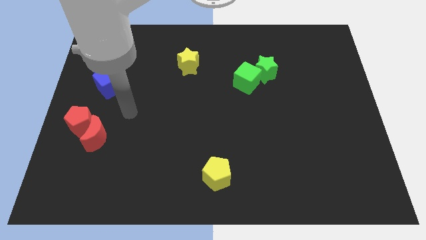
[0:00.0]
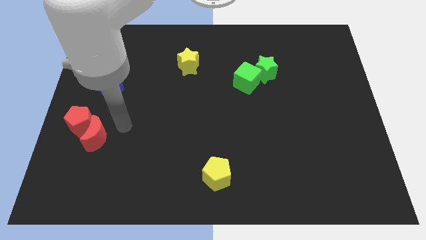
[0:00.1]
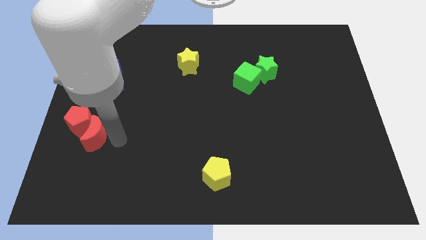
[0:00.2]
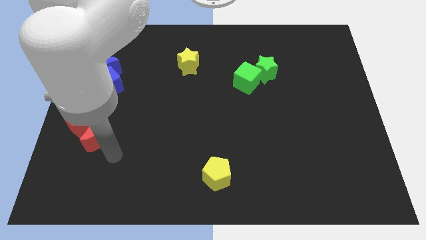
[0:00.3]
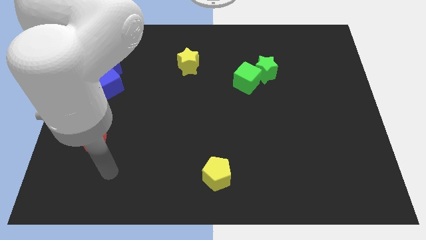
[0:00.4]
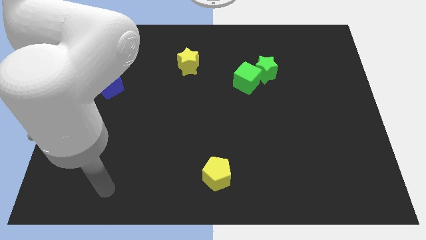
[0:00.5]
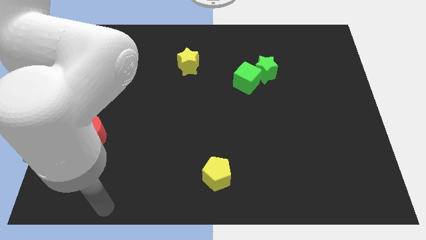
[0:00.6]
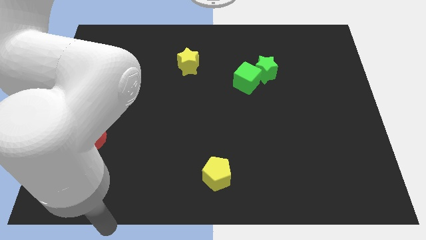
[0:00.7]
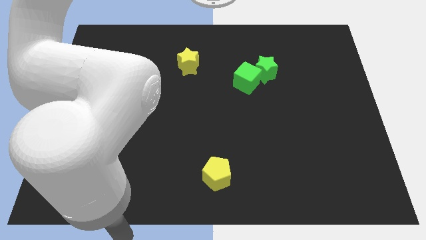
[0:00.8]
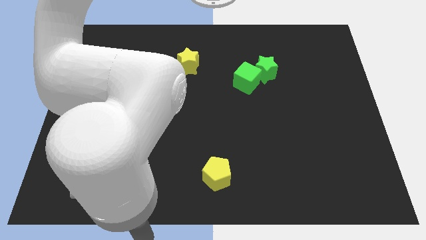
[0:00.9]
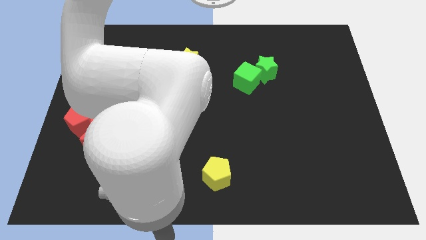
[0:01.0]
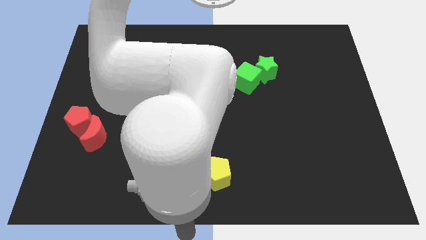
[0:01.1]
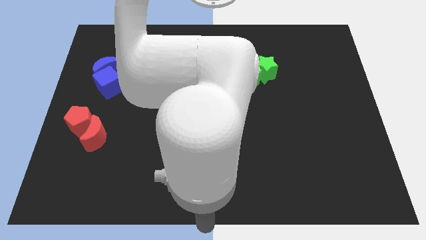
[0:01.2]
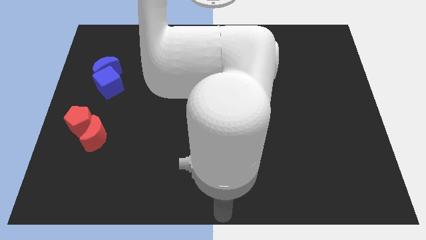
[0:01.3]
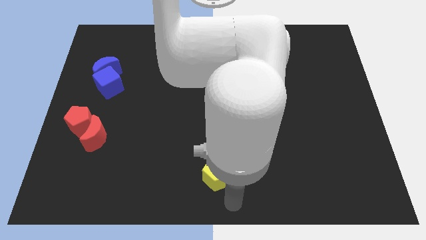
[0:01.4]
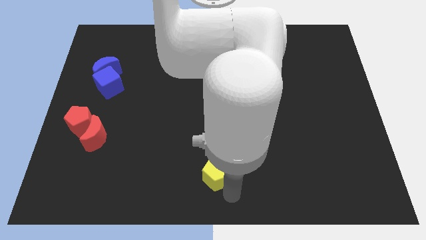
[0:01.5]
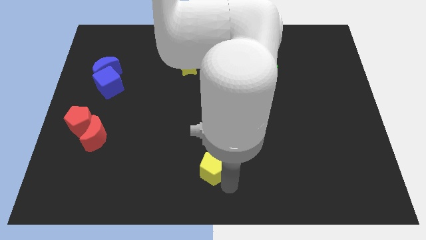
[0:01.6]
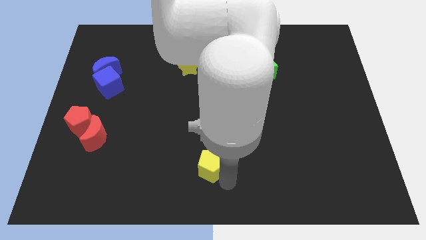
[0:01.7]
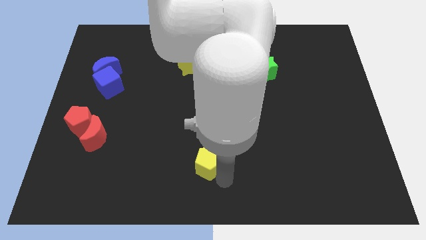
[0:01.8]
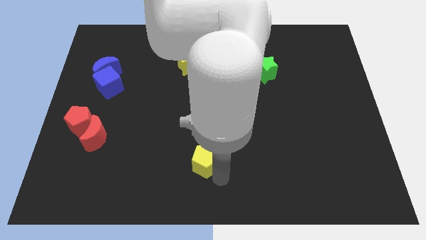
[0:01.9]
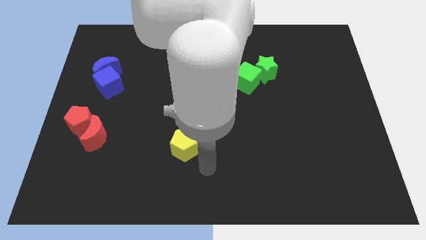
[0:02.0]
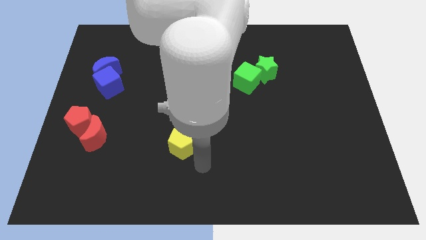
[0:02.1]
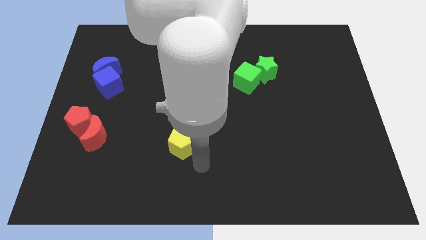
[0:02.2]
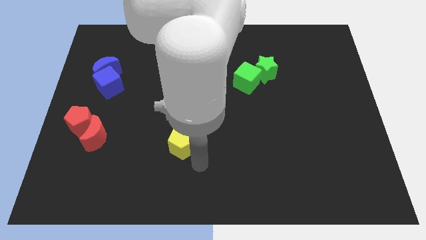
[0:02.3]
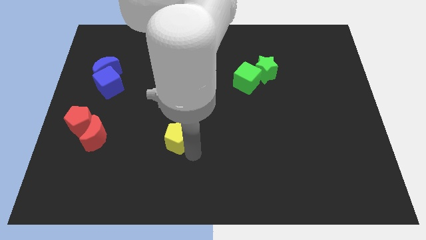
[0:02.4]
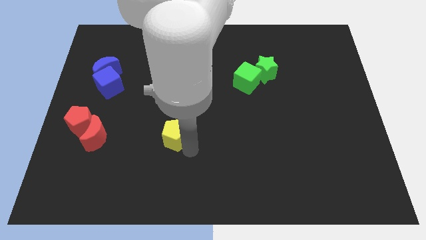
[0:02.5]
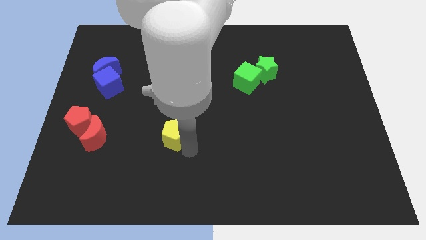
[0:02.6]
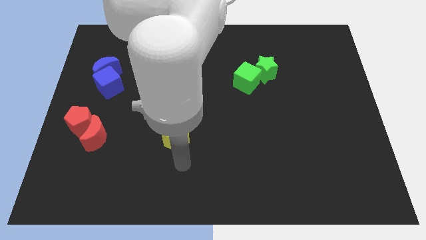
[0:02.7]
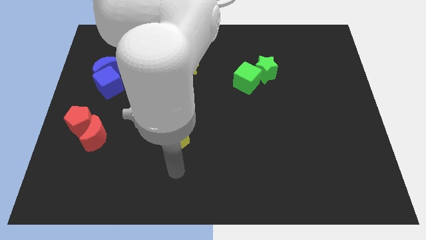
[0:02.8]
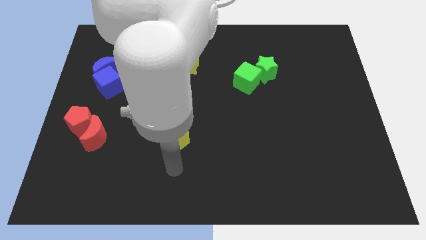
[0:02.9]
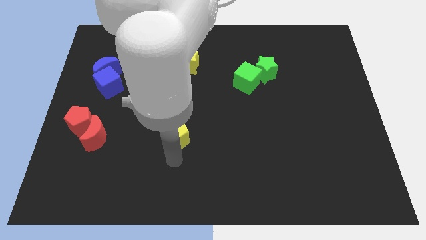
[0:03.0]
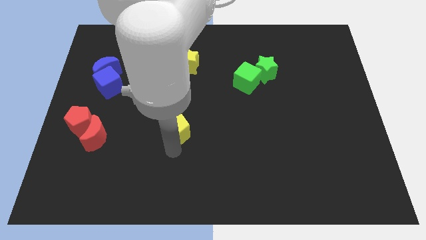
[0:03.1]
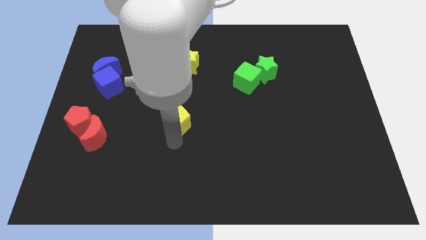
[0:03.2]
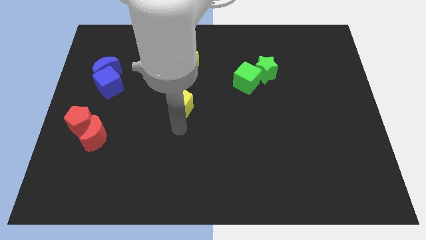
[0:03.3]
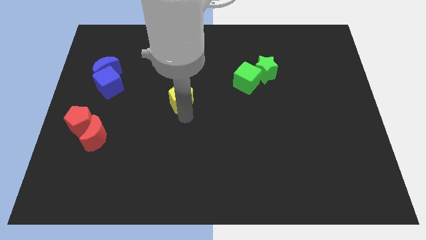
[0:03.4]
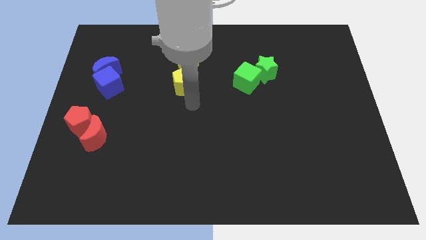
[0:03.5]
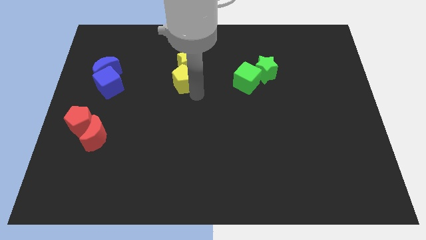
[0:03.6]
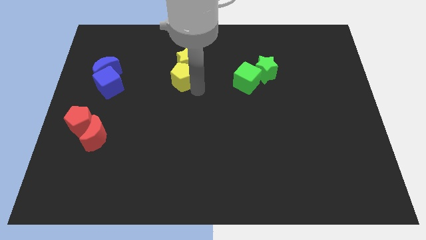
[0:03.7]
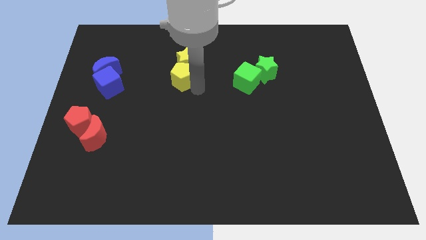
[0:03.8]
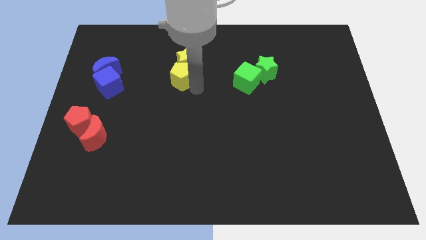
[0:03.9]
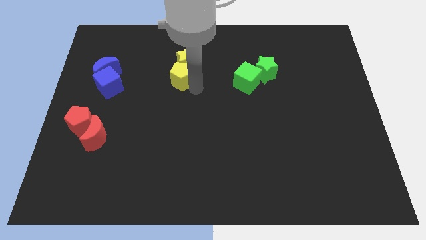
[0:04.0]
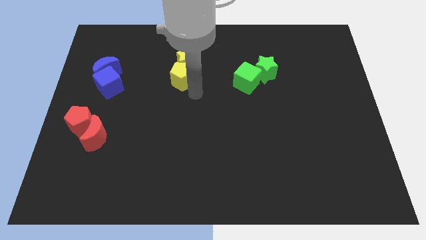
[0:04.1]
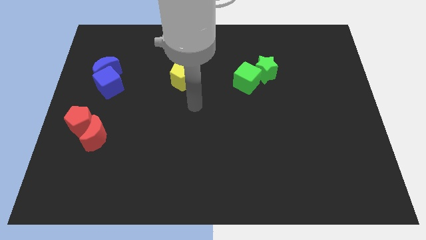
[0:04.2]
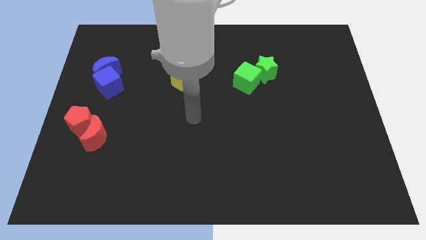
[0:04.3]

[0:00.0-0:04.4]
slide the yellow pentagon to the bottom side of the yellow star

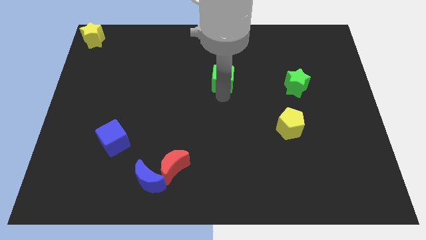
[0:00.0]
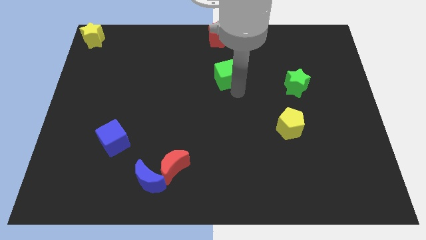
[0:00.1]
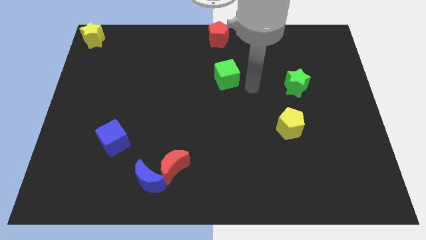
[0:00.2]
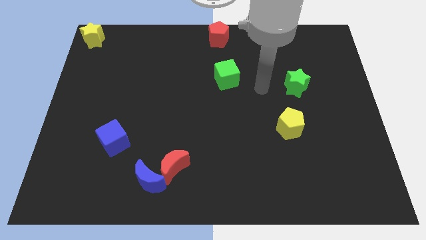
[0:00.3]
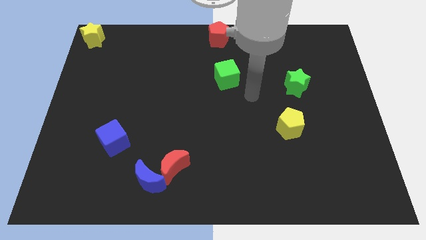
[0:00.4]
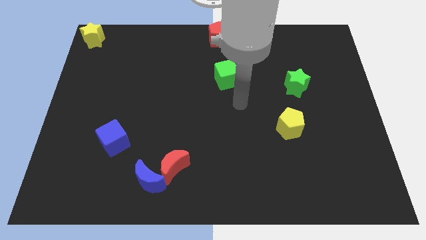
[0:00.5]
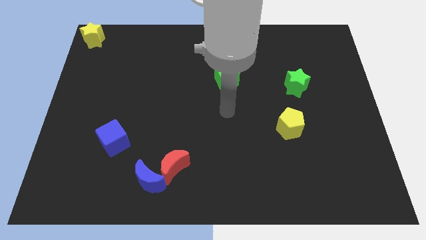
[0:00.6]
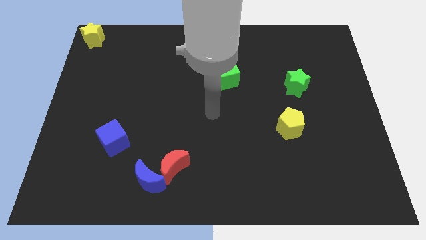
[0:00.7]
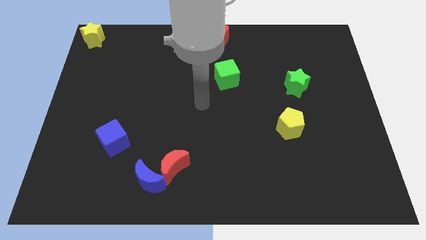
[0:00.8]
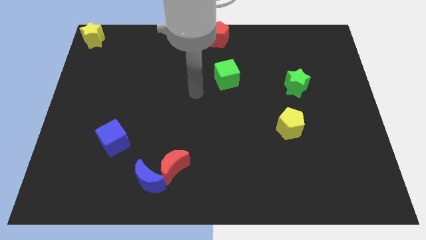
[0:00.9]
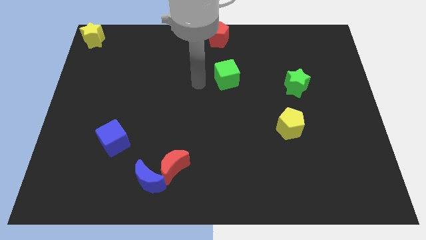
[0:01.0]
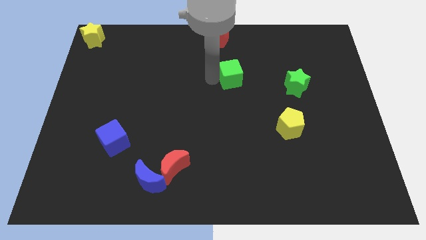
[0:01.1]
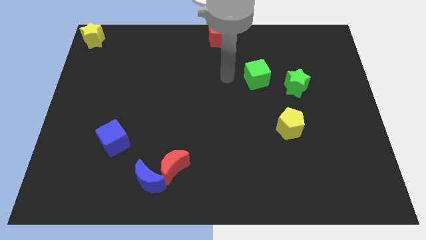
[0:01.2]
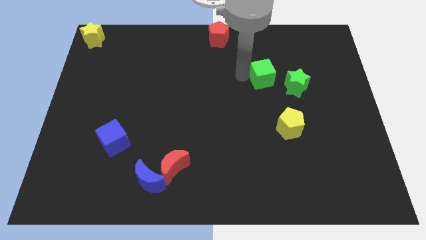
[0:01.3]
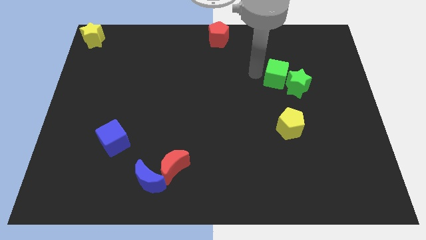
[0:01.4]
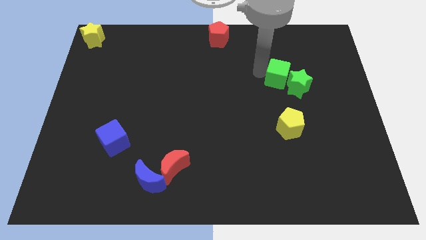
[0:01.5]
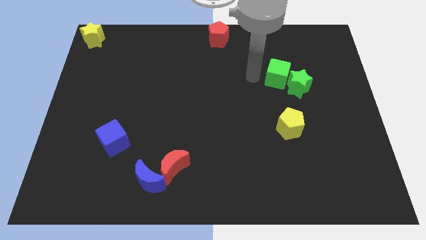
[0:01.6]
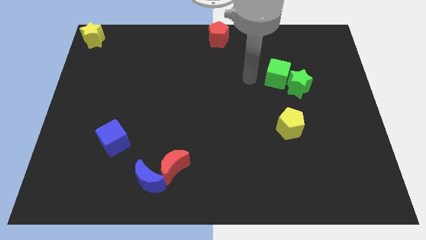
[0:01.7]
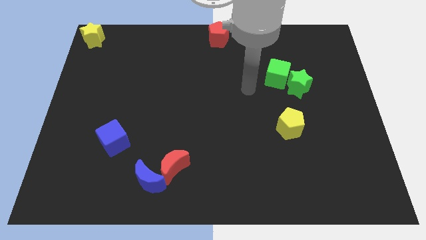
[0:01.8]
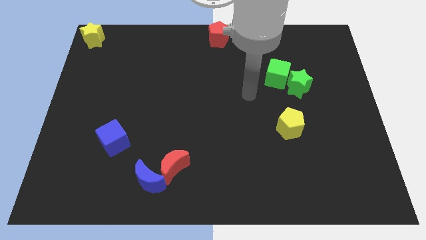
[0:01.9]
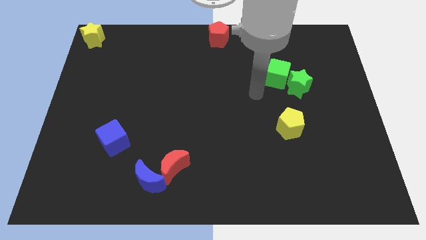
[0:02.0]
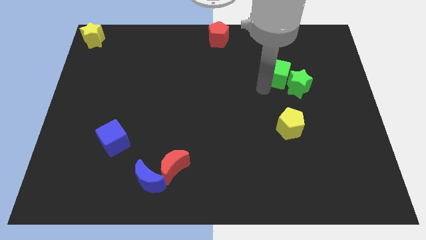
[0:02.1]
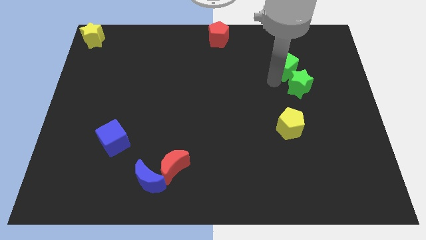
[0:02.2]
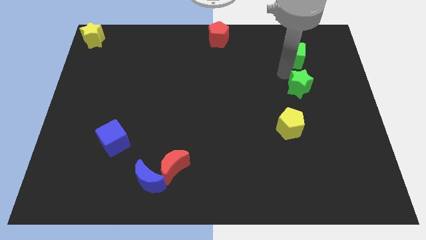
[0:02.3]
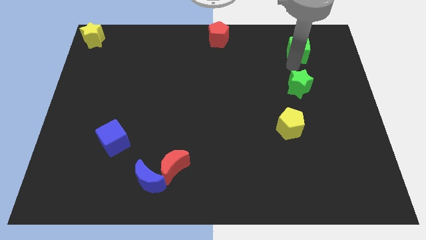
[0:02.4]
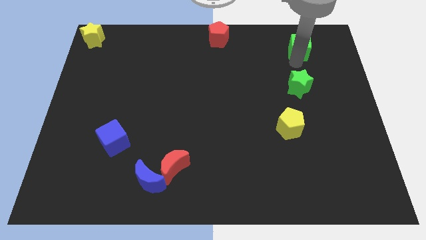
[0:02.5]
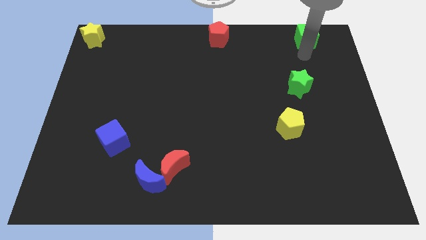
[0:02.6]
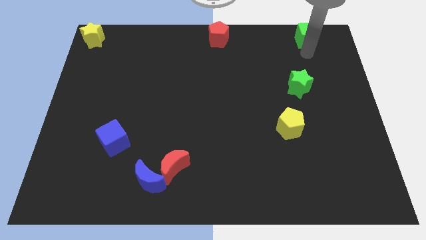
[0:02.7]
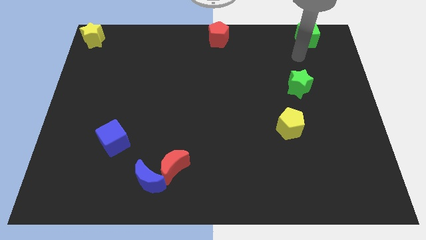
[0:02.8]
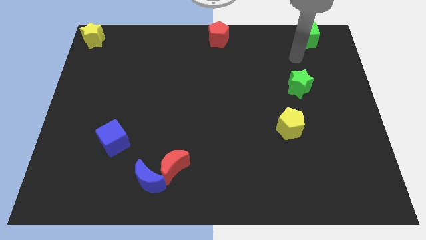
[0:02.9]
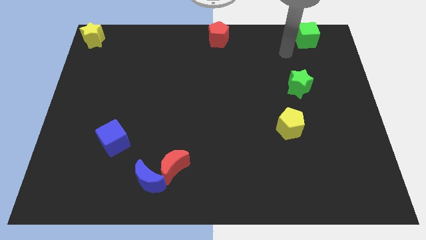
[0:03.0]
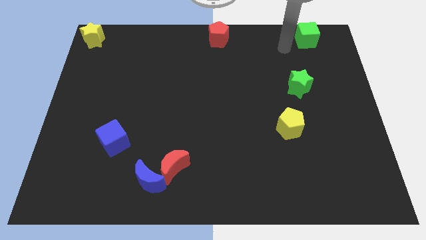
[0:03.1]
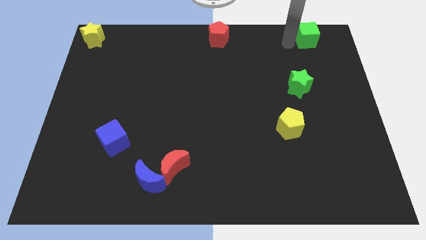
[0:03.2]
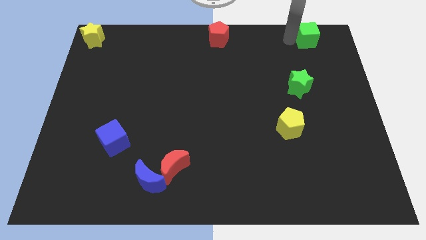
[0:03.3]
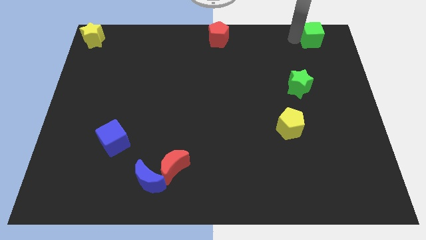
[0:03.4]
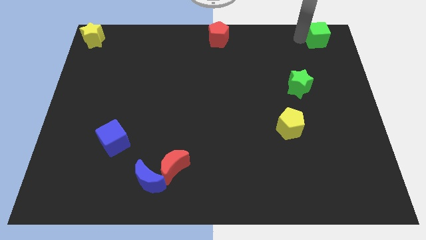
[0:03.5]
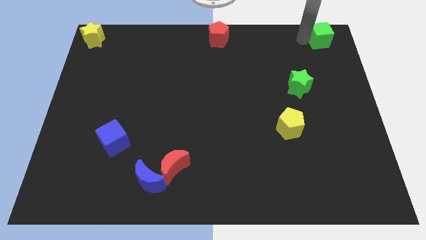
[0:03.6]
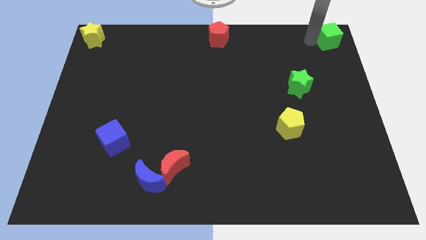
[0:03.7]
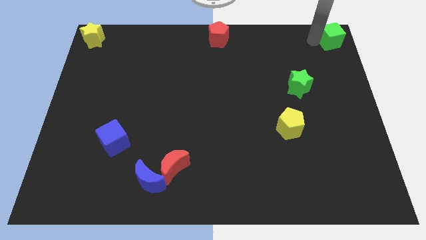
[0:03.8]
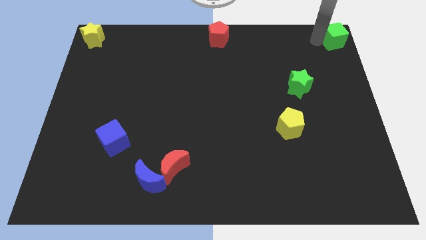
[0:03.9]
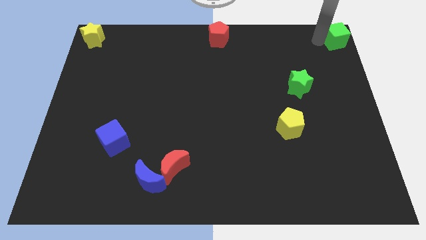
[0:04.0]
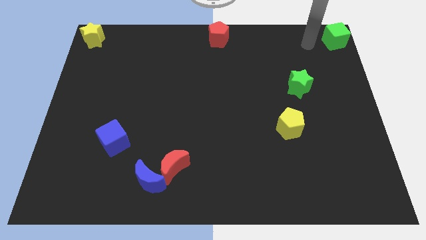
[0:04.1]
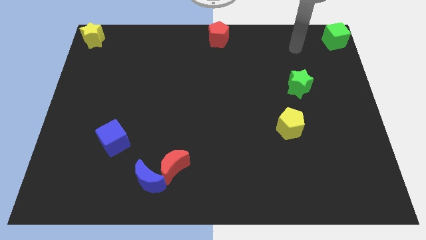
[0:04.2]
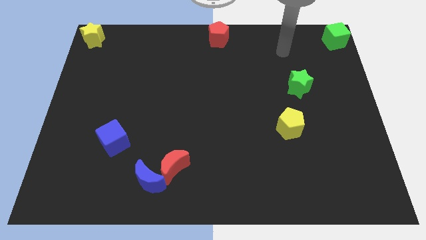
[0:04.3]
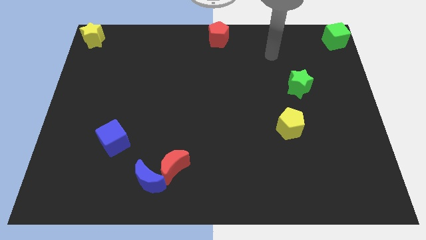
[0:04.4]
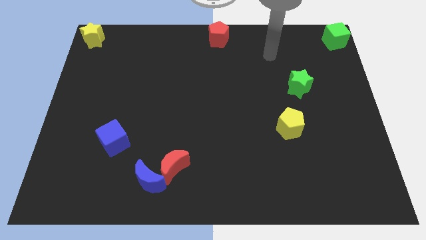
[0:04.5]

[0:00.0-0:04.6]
move the green cube to the top right corner of the board
